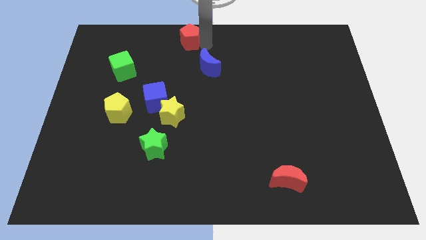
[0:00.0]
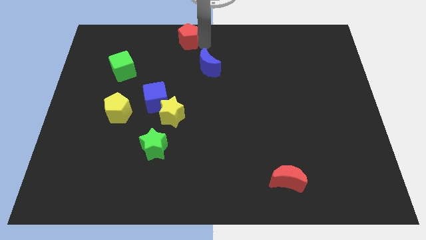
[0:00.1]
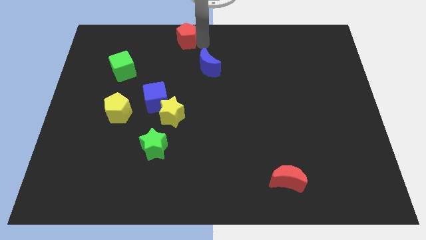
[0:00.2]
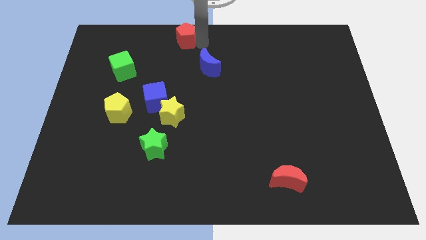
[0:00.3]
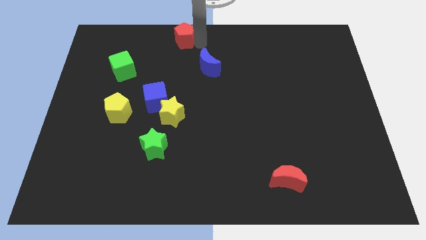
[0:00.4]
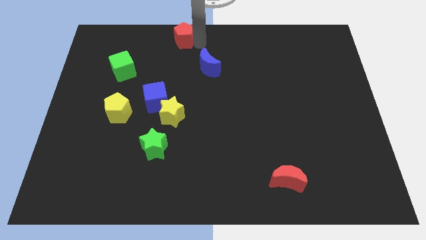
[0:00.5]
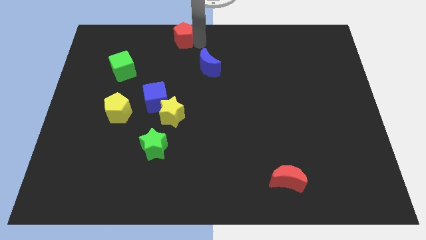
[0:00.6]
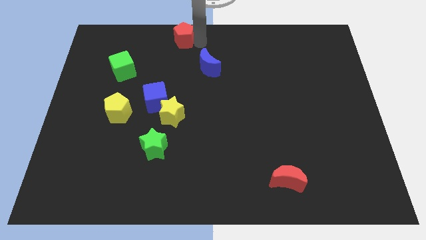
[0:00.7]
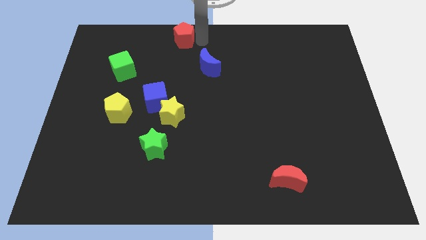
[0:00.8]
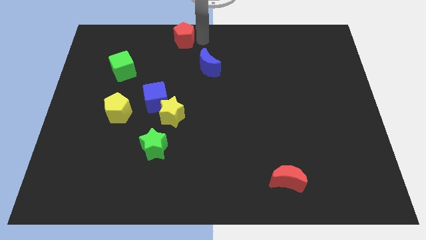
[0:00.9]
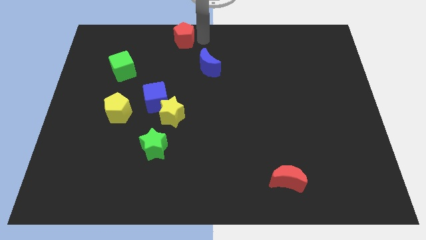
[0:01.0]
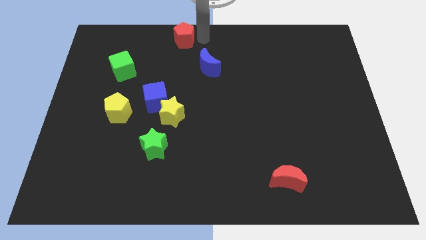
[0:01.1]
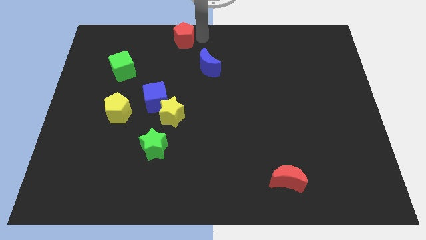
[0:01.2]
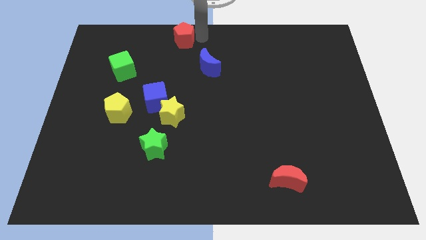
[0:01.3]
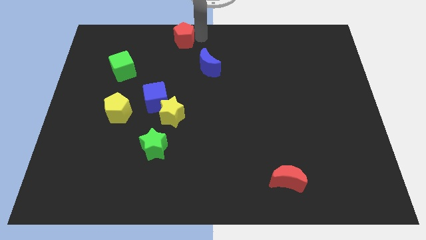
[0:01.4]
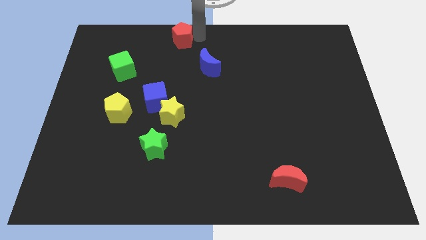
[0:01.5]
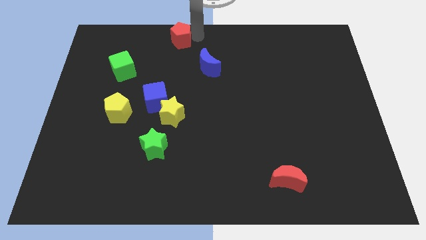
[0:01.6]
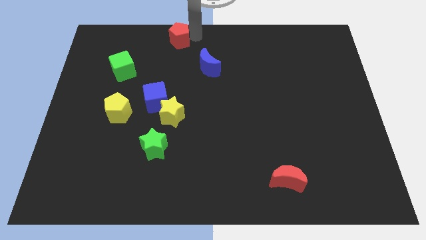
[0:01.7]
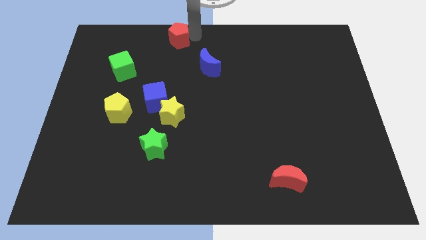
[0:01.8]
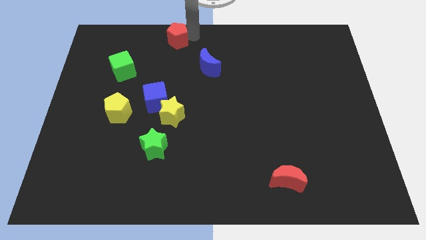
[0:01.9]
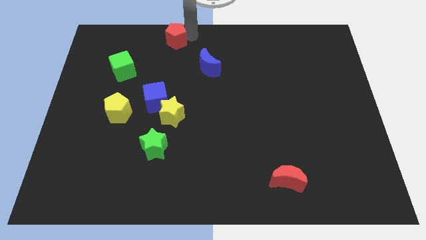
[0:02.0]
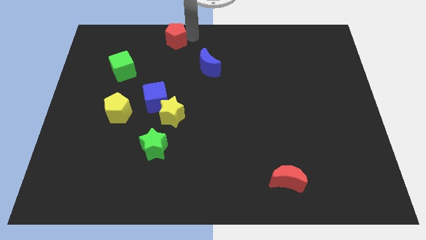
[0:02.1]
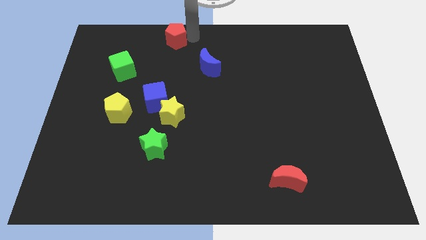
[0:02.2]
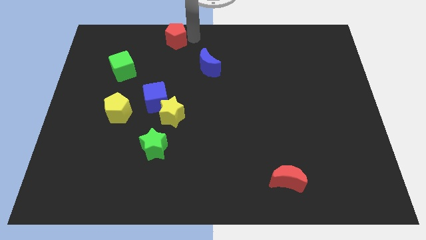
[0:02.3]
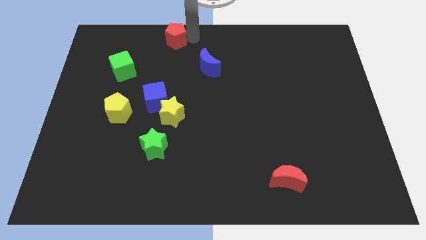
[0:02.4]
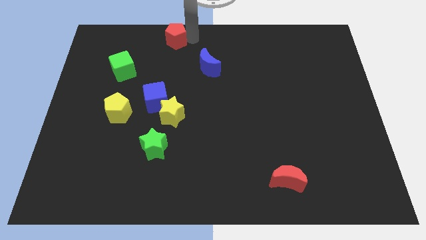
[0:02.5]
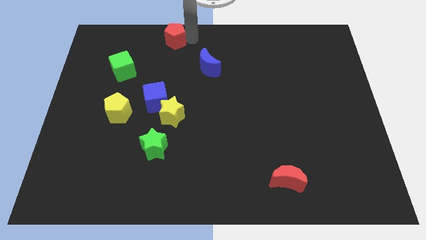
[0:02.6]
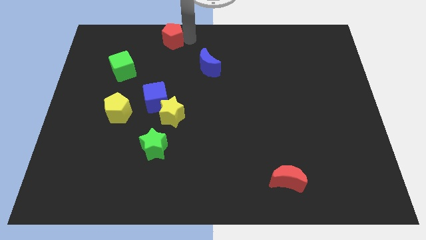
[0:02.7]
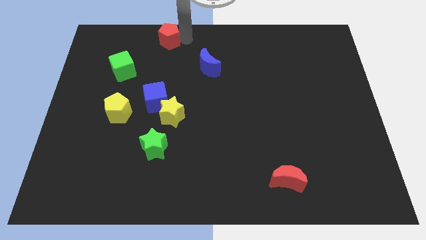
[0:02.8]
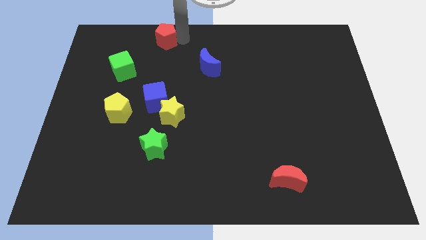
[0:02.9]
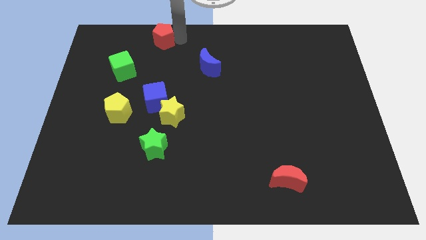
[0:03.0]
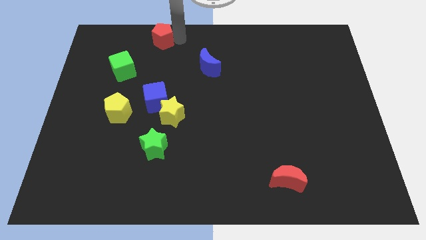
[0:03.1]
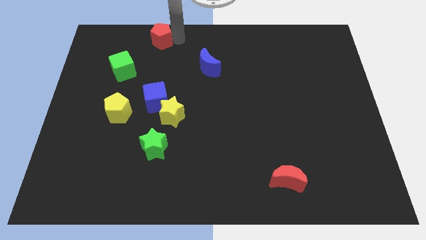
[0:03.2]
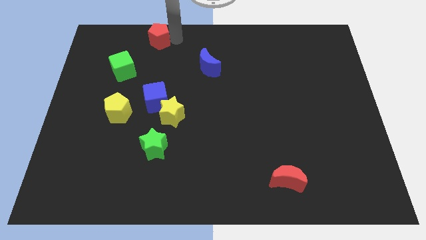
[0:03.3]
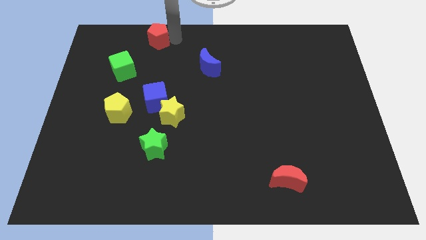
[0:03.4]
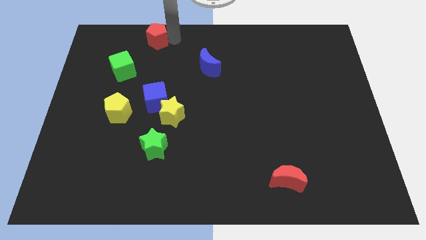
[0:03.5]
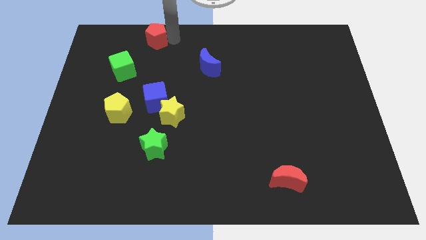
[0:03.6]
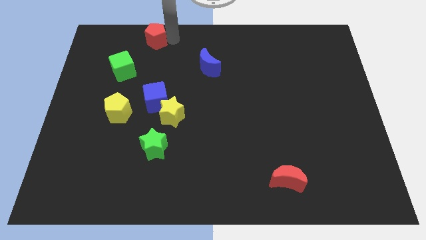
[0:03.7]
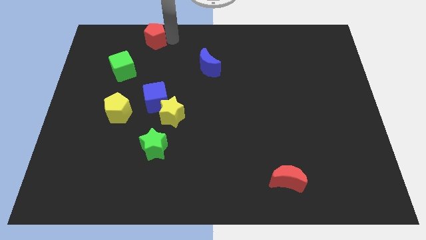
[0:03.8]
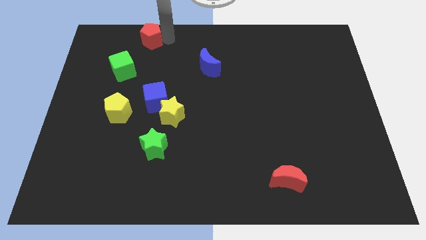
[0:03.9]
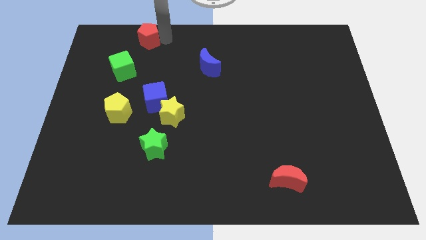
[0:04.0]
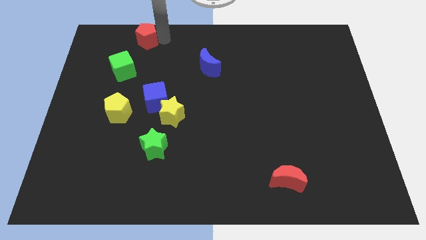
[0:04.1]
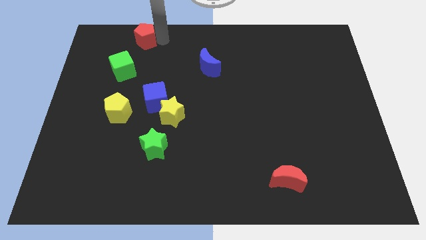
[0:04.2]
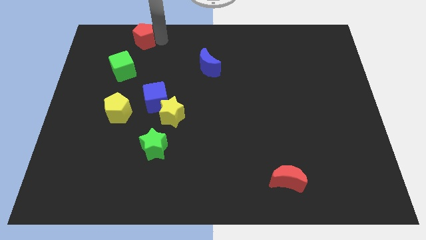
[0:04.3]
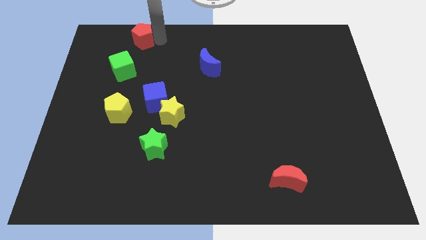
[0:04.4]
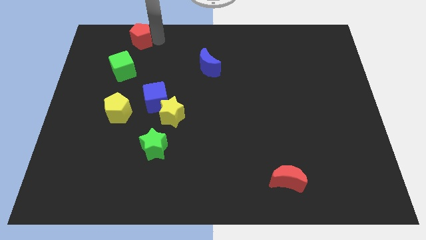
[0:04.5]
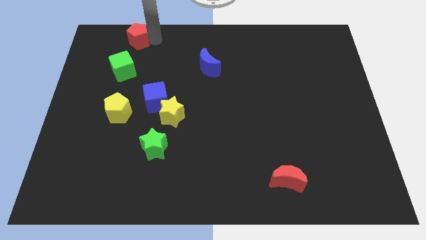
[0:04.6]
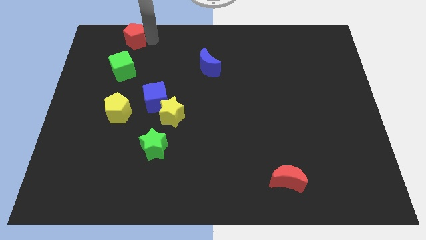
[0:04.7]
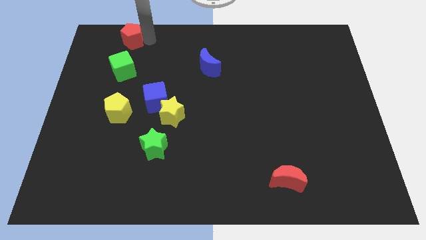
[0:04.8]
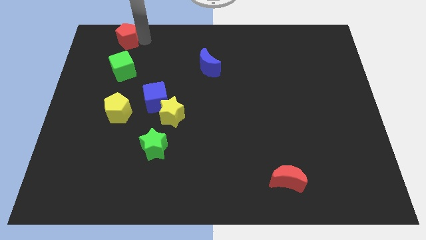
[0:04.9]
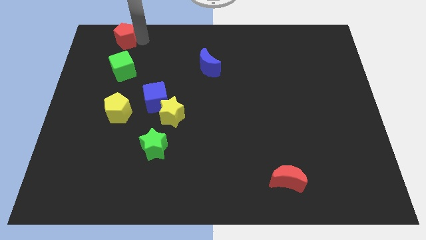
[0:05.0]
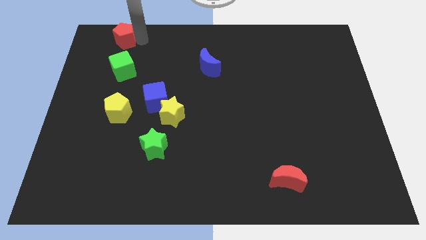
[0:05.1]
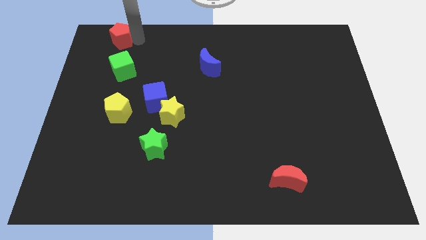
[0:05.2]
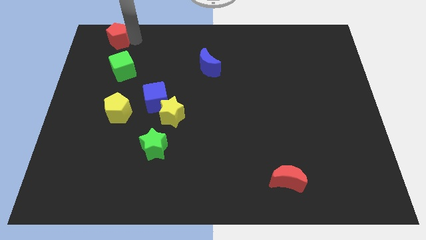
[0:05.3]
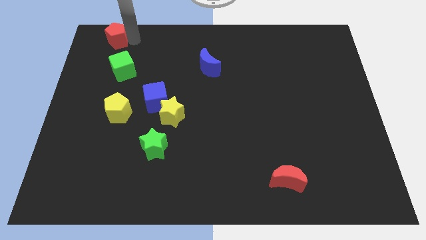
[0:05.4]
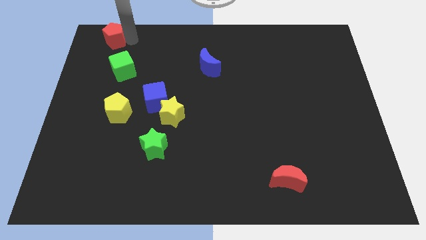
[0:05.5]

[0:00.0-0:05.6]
place the red pentagon above the green cube

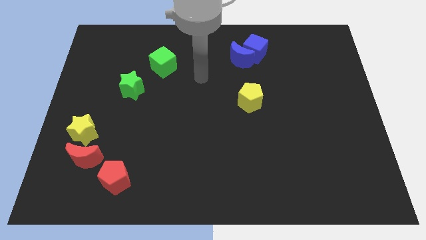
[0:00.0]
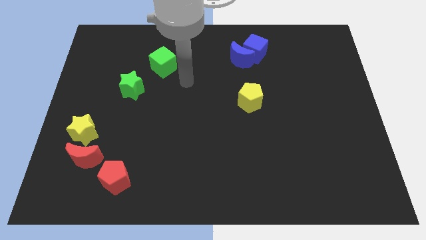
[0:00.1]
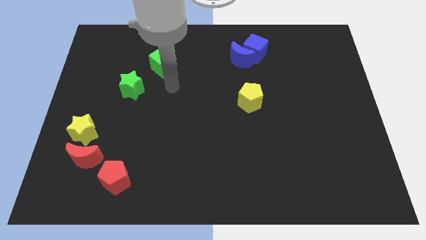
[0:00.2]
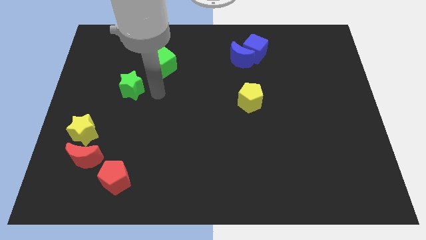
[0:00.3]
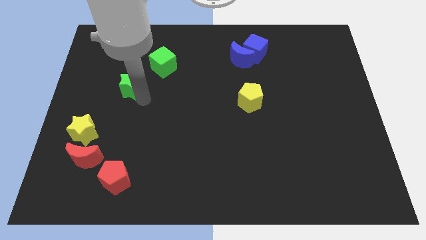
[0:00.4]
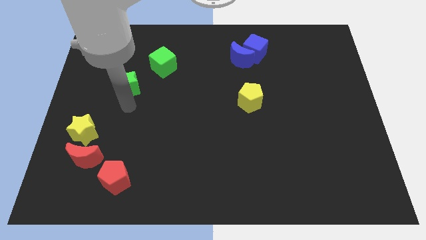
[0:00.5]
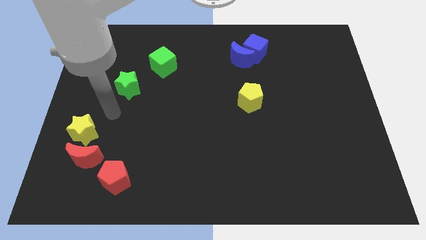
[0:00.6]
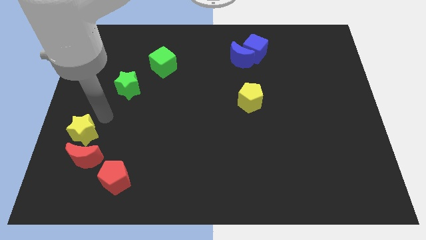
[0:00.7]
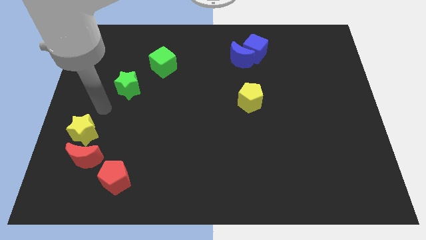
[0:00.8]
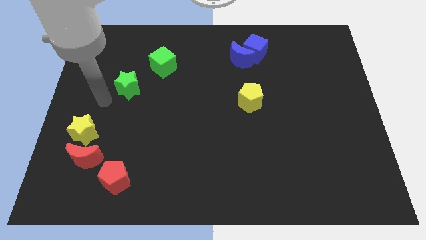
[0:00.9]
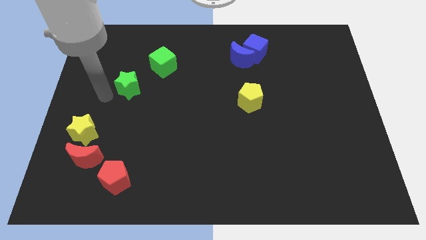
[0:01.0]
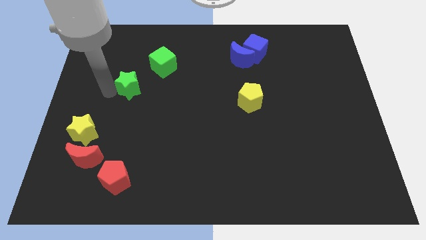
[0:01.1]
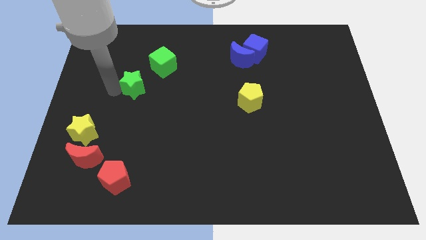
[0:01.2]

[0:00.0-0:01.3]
move your arm to the left of green star

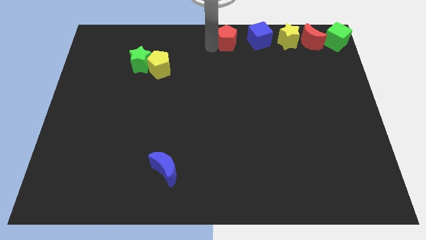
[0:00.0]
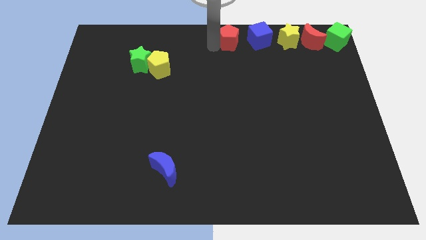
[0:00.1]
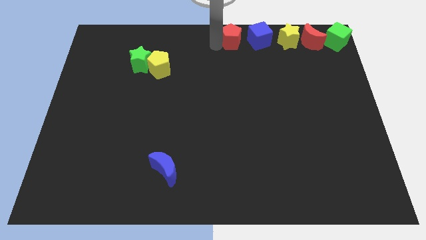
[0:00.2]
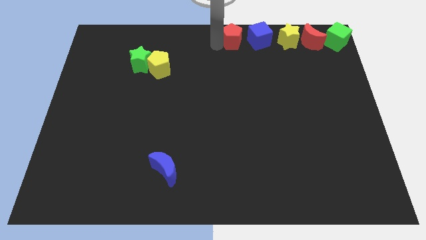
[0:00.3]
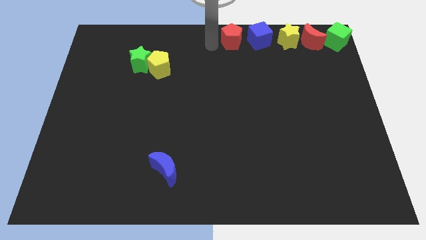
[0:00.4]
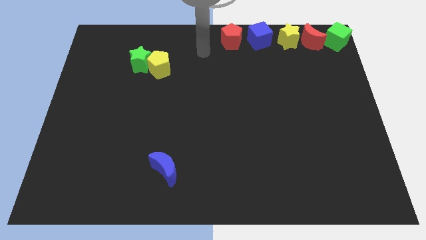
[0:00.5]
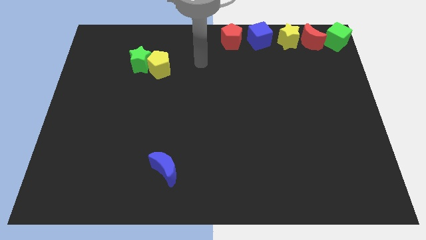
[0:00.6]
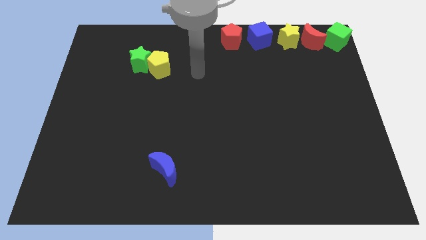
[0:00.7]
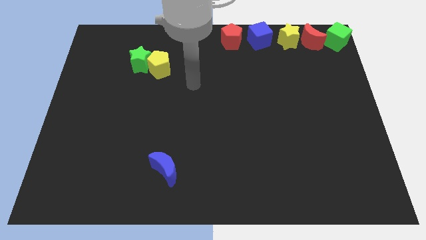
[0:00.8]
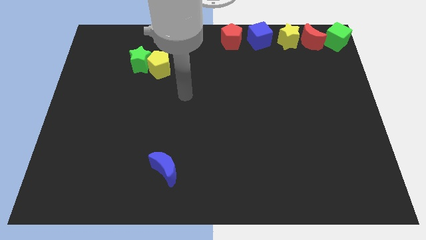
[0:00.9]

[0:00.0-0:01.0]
adjust the red pentagon horizontally left to the blue cube

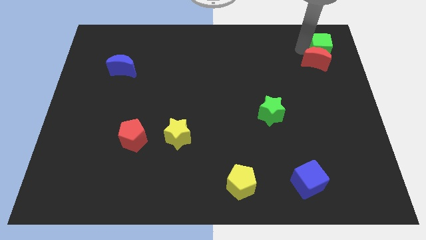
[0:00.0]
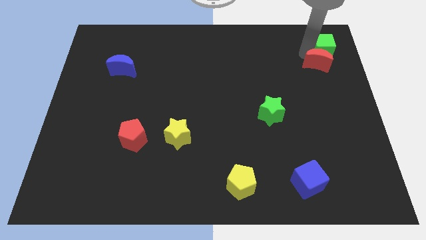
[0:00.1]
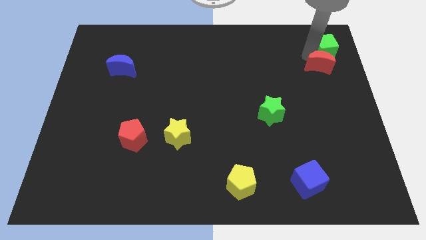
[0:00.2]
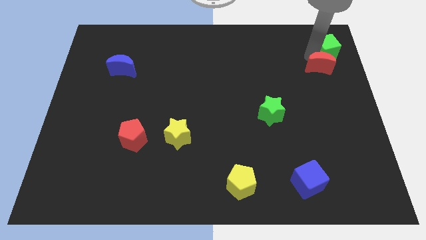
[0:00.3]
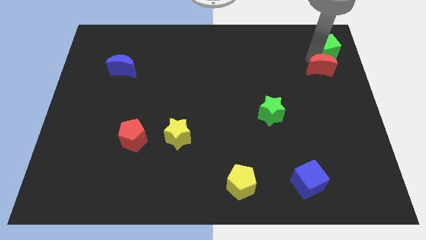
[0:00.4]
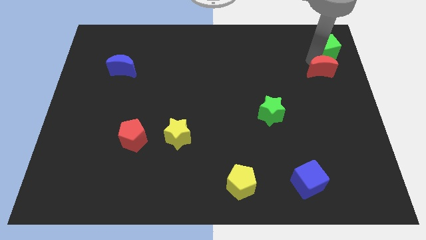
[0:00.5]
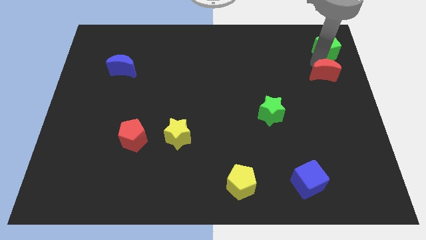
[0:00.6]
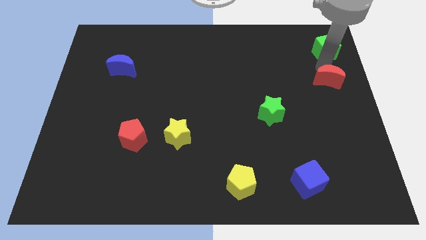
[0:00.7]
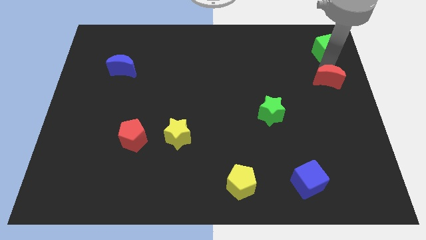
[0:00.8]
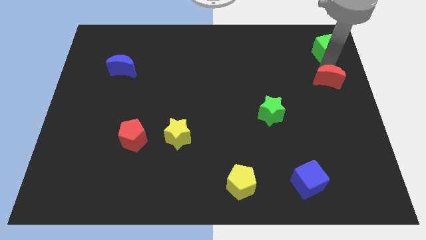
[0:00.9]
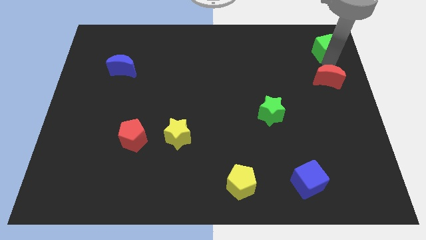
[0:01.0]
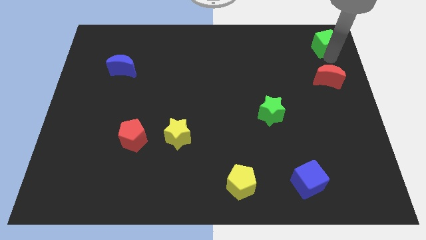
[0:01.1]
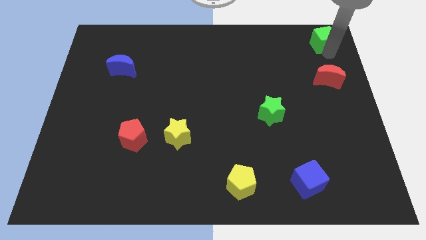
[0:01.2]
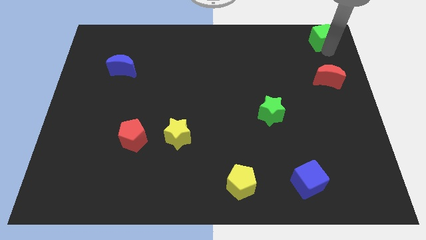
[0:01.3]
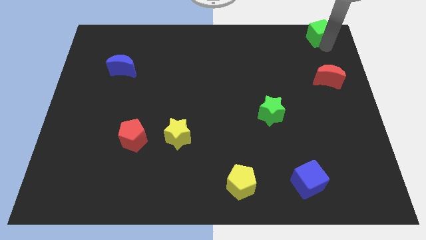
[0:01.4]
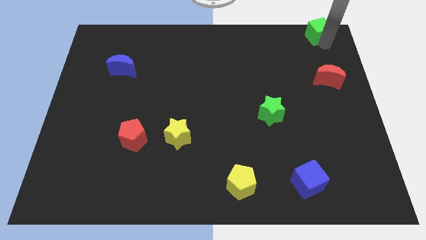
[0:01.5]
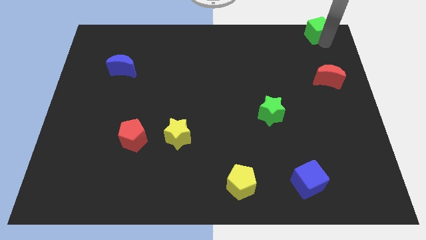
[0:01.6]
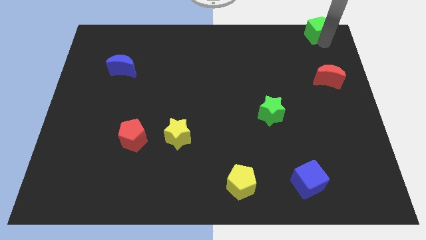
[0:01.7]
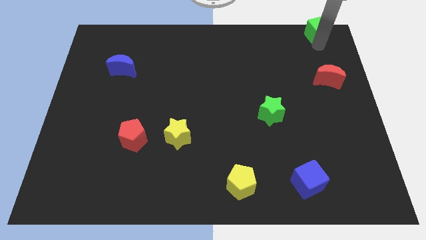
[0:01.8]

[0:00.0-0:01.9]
move the green cube to the top right corner
